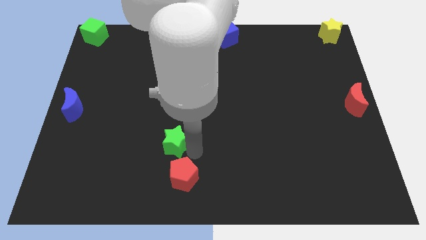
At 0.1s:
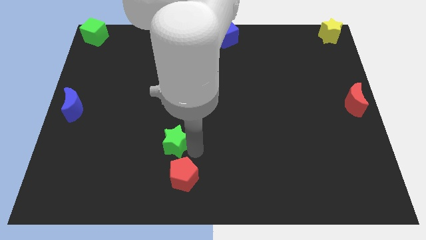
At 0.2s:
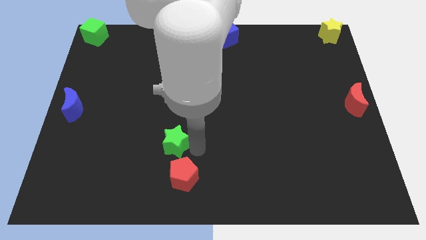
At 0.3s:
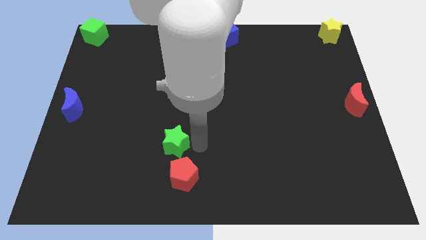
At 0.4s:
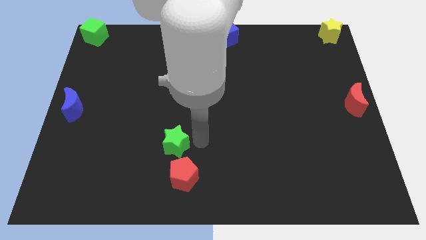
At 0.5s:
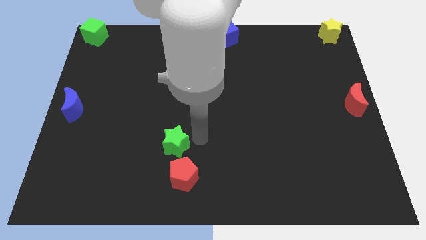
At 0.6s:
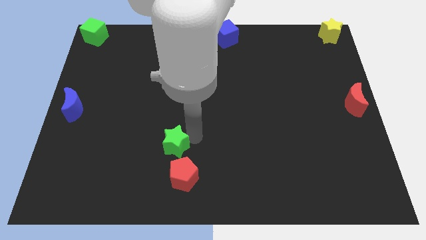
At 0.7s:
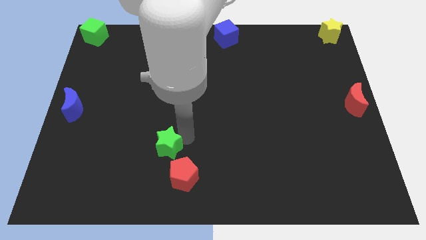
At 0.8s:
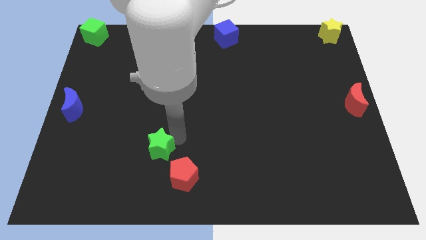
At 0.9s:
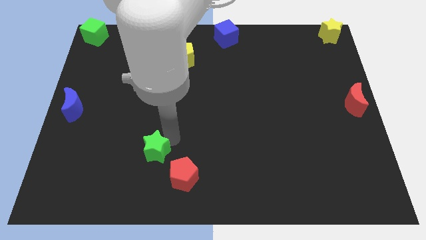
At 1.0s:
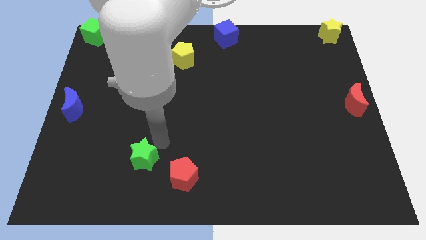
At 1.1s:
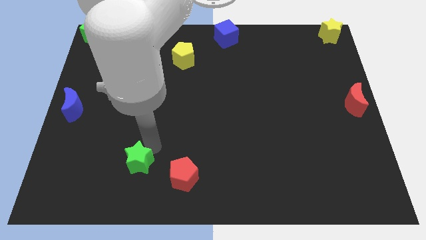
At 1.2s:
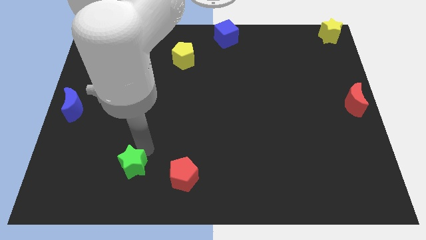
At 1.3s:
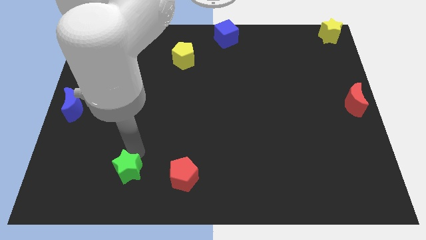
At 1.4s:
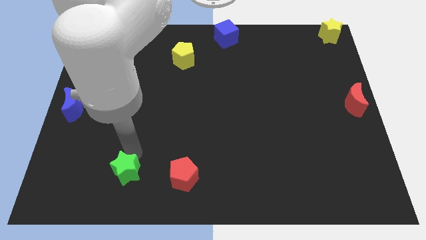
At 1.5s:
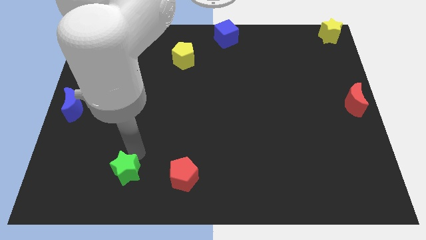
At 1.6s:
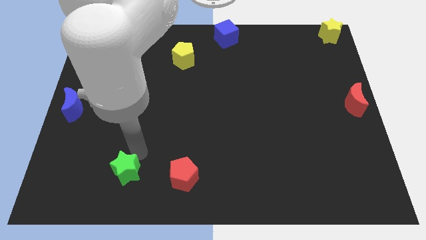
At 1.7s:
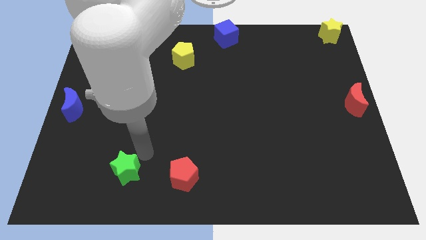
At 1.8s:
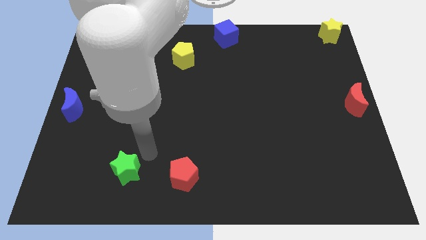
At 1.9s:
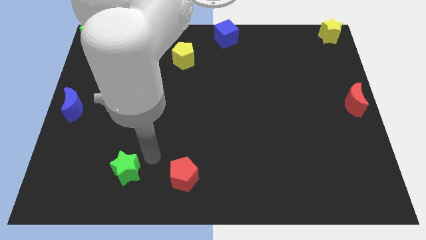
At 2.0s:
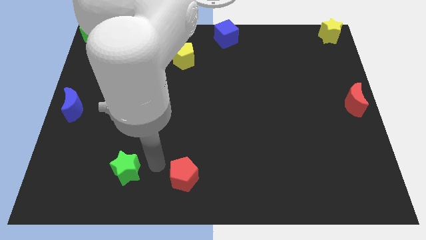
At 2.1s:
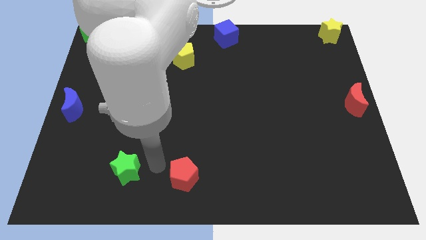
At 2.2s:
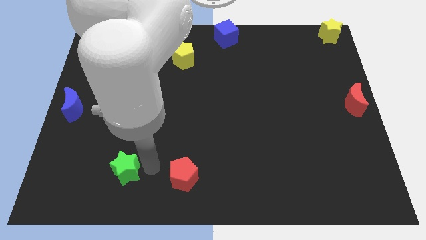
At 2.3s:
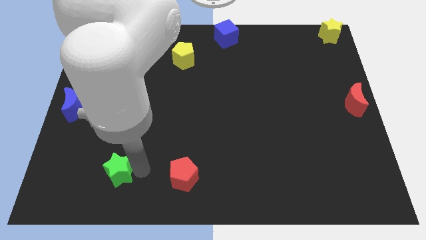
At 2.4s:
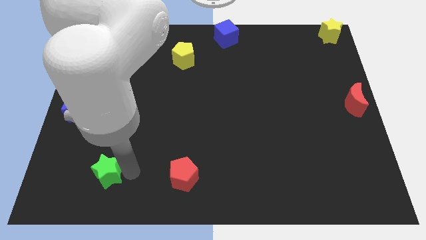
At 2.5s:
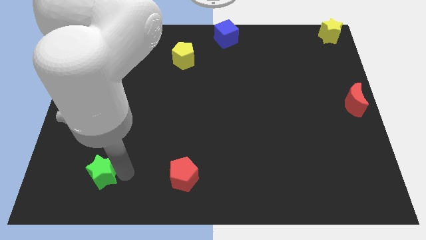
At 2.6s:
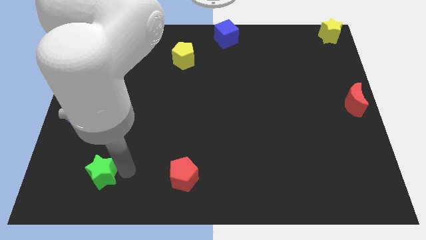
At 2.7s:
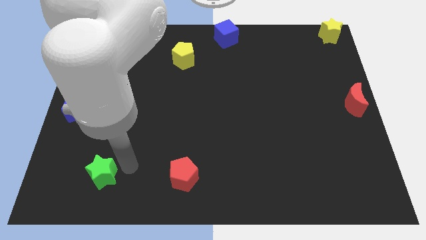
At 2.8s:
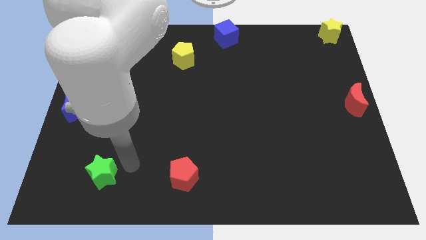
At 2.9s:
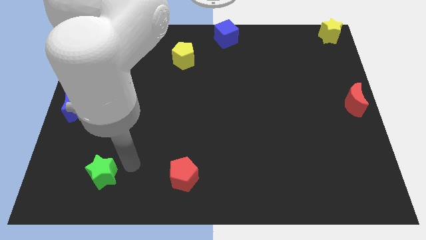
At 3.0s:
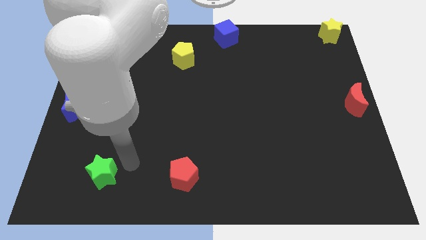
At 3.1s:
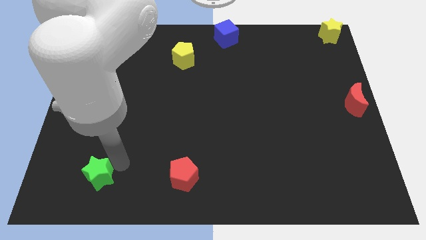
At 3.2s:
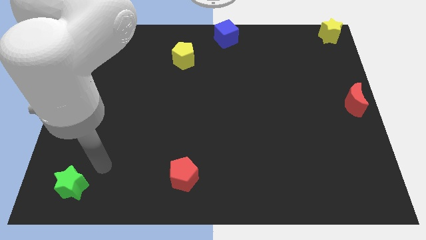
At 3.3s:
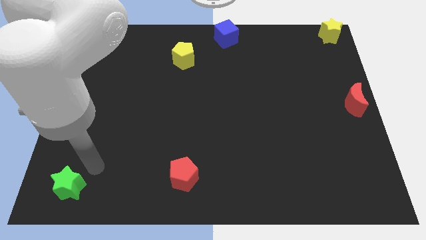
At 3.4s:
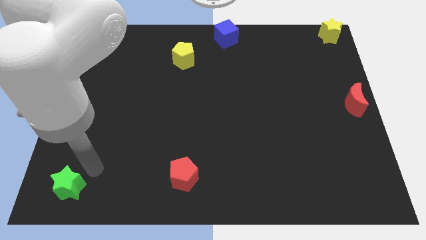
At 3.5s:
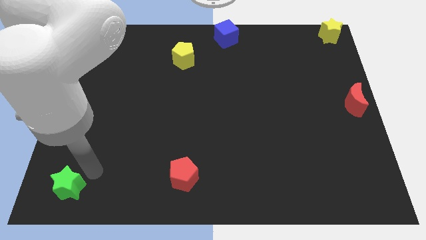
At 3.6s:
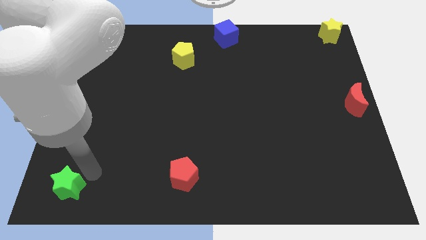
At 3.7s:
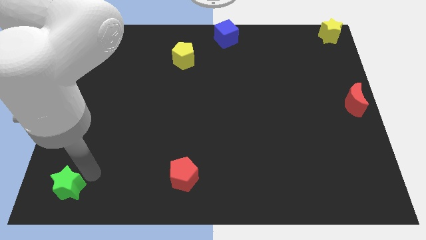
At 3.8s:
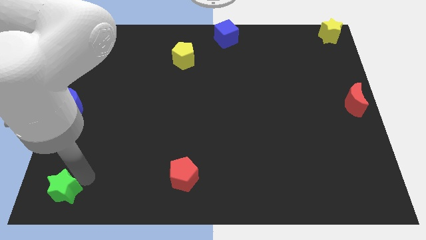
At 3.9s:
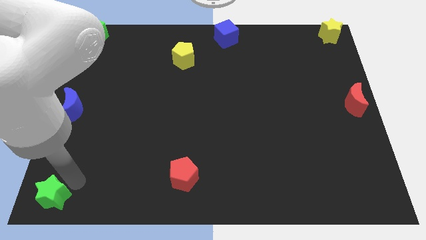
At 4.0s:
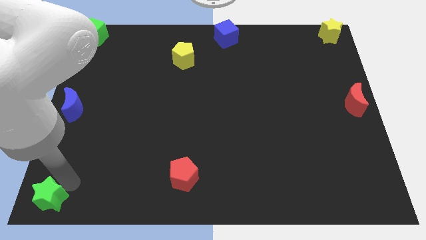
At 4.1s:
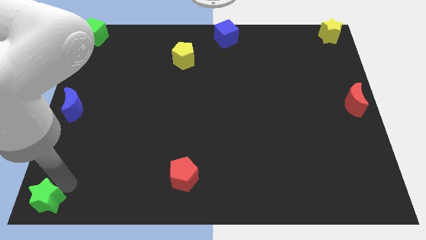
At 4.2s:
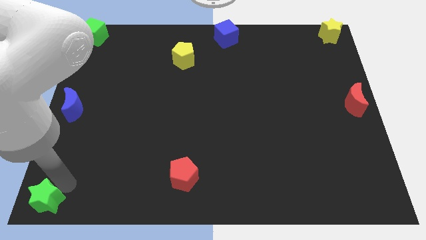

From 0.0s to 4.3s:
move the green star to the bottom left of the board

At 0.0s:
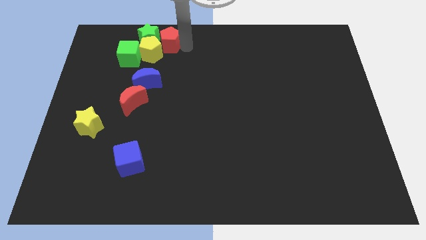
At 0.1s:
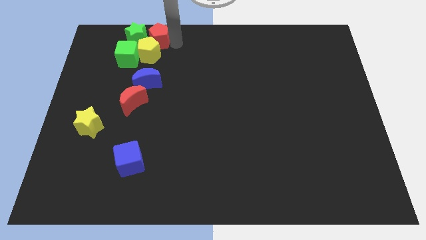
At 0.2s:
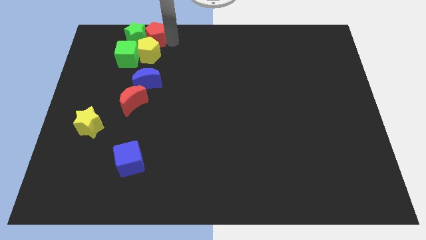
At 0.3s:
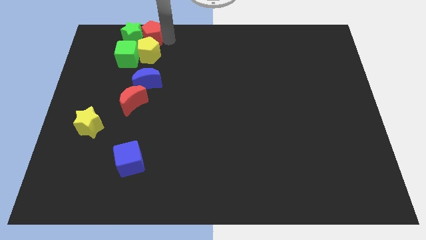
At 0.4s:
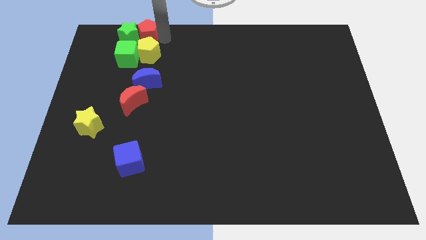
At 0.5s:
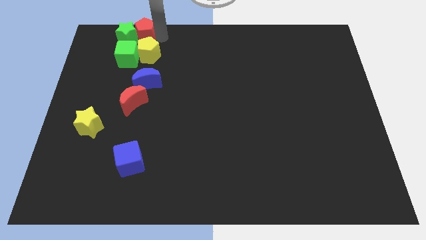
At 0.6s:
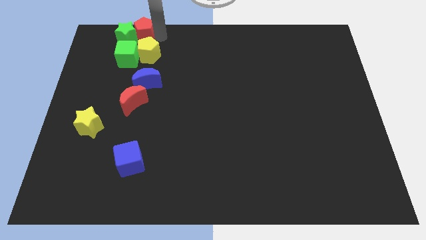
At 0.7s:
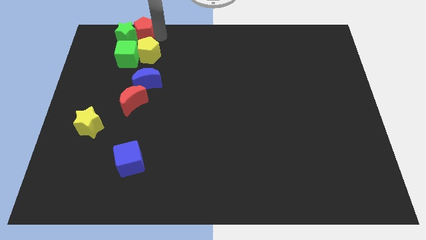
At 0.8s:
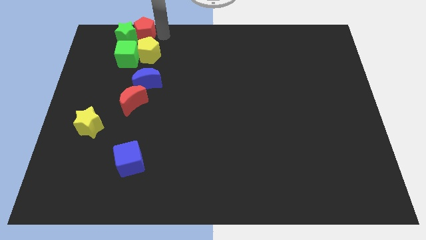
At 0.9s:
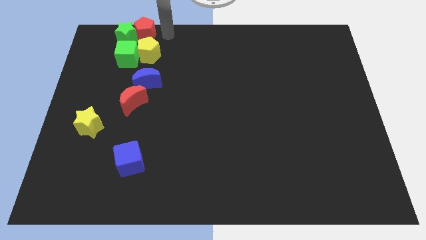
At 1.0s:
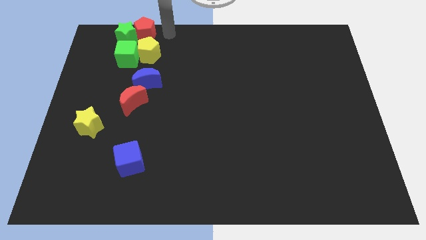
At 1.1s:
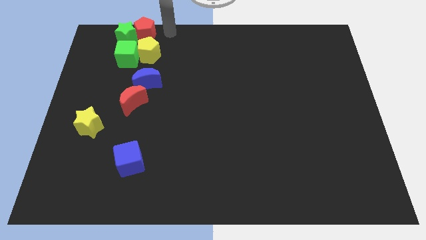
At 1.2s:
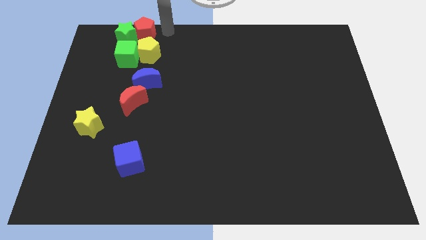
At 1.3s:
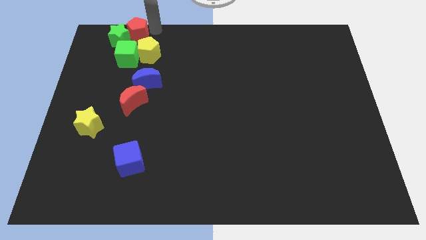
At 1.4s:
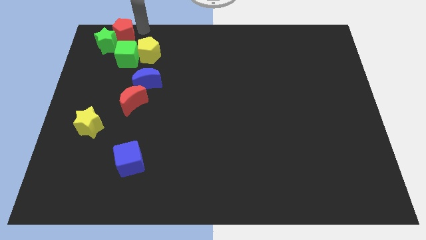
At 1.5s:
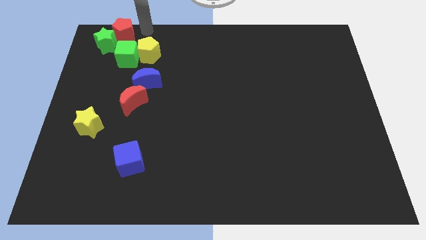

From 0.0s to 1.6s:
push the green star with the red pentagon towards the left

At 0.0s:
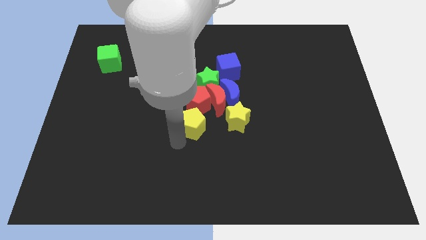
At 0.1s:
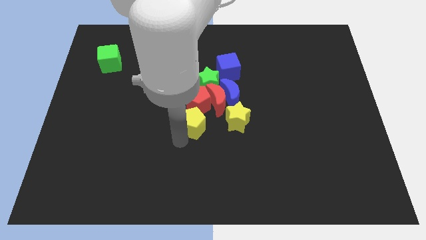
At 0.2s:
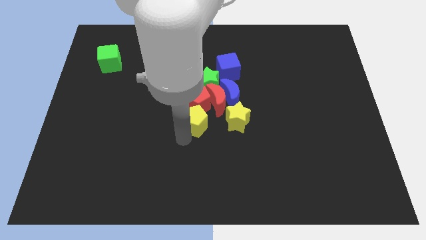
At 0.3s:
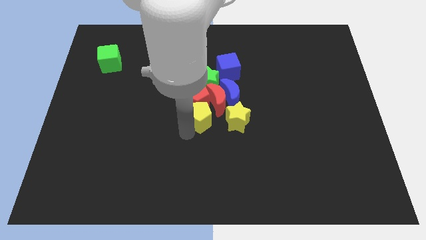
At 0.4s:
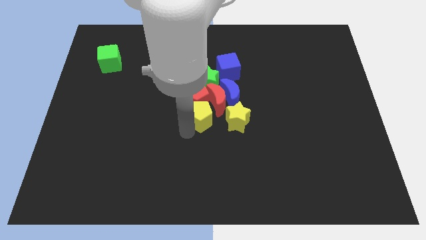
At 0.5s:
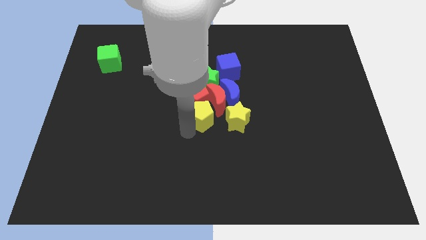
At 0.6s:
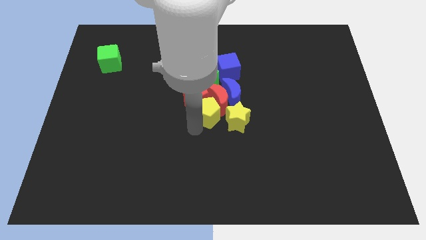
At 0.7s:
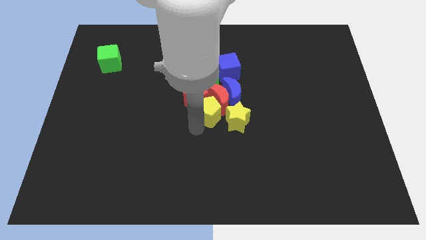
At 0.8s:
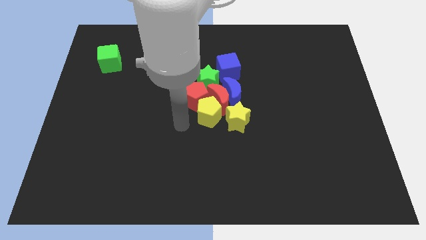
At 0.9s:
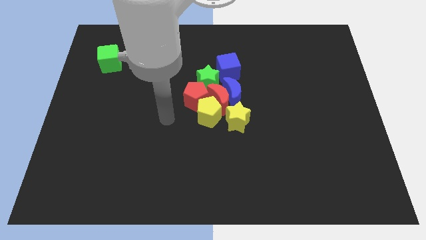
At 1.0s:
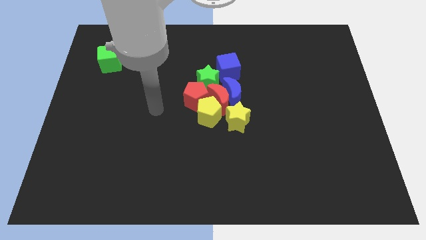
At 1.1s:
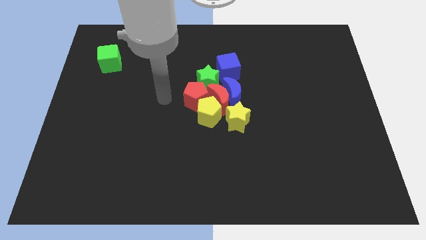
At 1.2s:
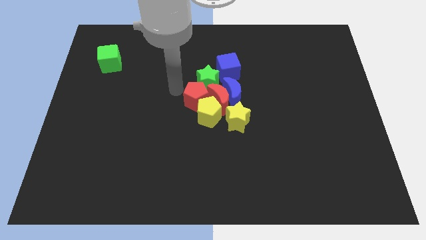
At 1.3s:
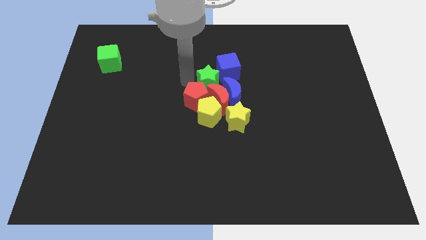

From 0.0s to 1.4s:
push the yellow pentagon to the group of blocks

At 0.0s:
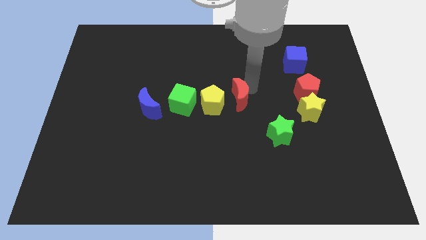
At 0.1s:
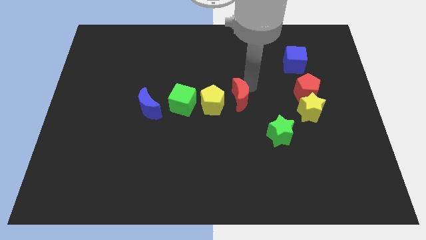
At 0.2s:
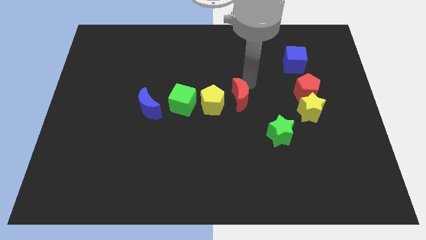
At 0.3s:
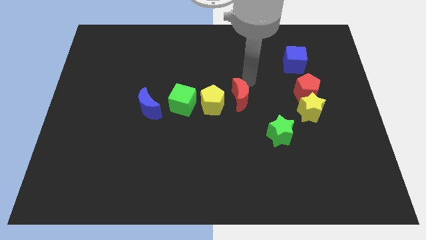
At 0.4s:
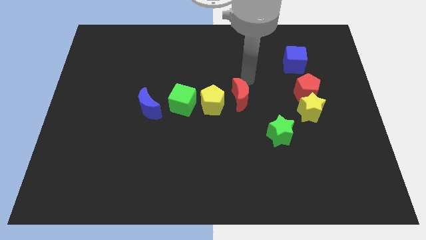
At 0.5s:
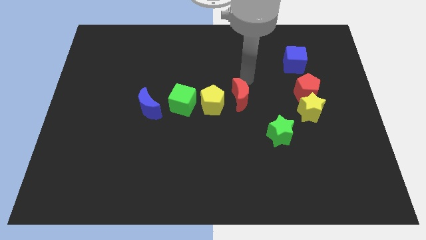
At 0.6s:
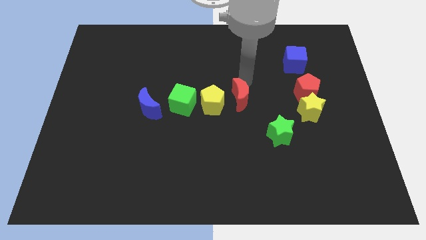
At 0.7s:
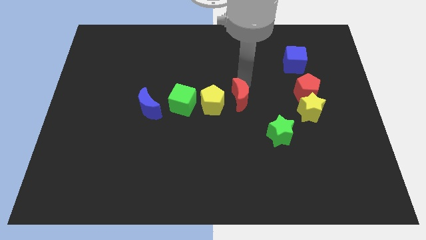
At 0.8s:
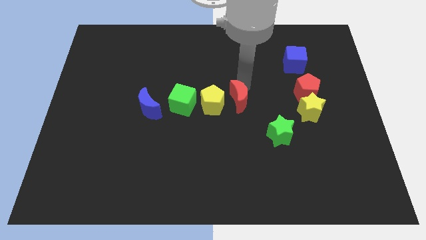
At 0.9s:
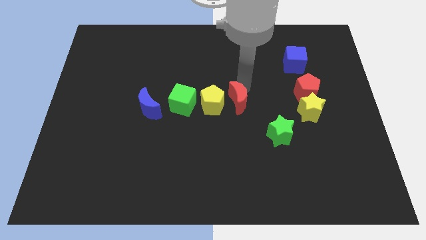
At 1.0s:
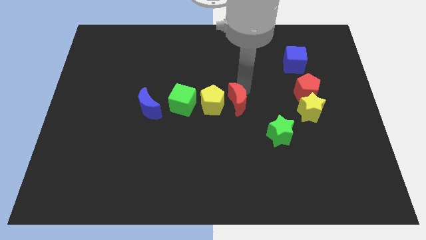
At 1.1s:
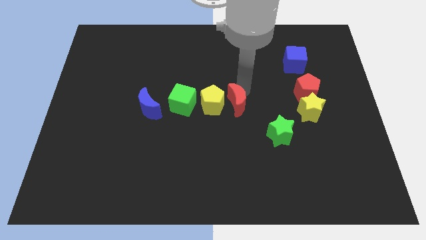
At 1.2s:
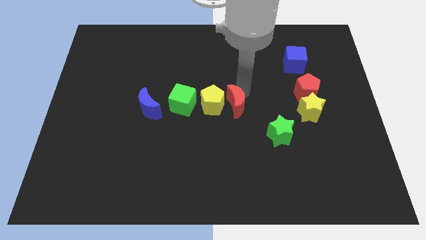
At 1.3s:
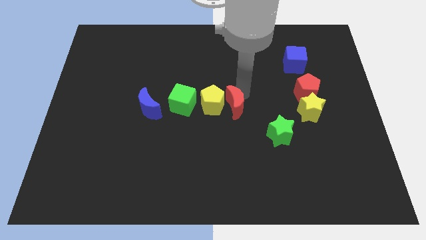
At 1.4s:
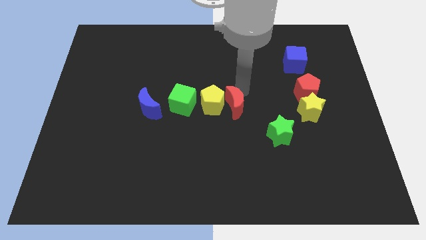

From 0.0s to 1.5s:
slide the red moon to the center of the board

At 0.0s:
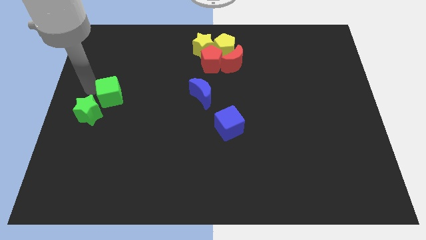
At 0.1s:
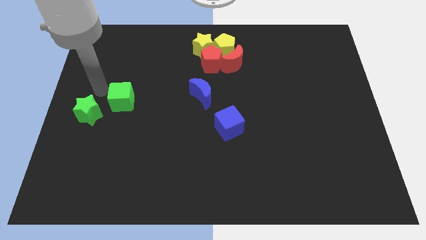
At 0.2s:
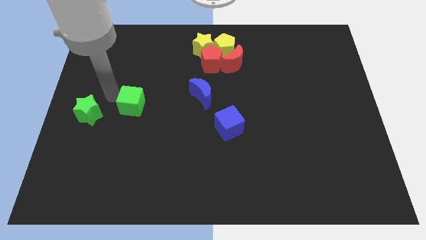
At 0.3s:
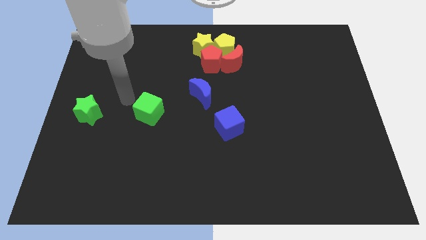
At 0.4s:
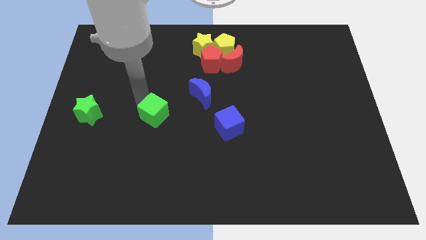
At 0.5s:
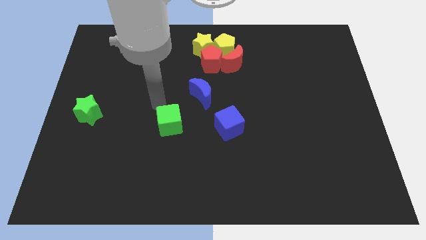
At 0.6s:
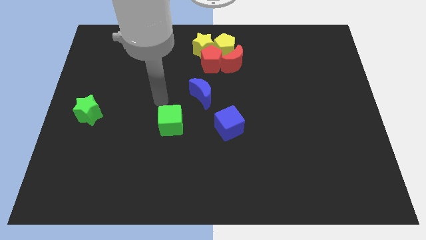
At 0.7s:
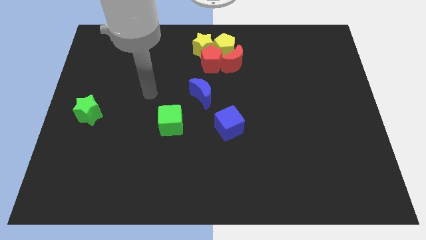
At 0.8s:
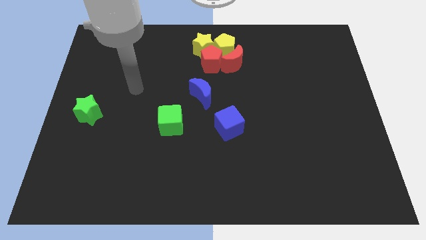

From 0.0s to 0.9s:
move the green cube to the left side of the blue cube on the board
